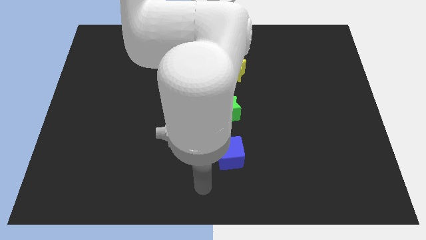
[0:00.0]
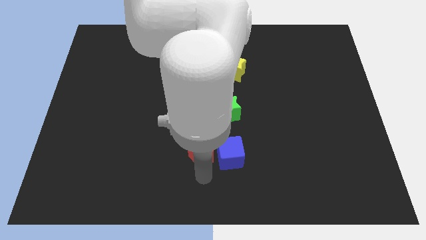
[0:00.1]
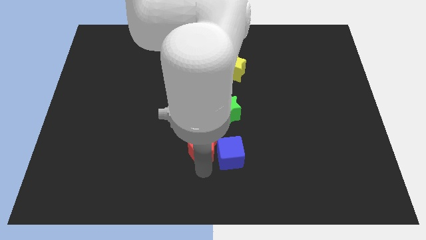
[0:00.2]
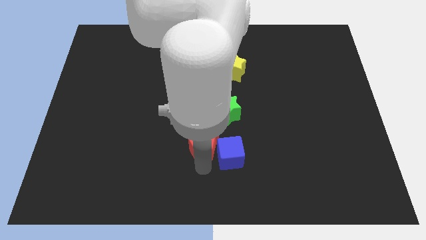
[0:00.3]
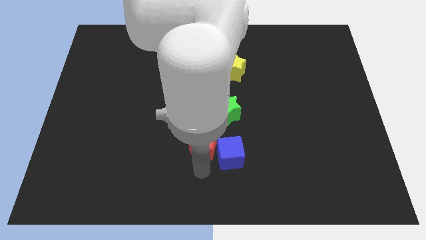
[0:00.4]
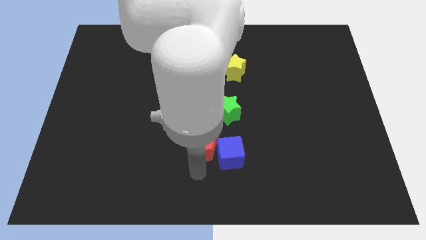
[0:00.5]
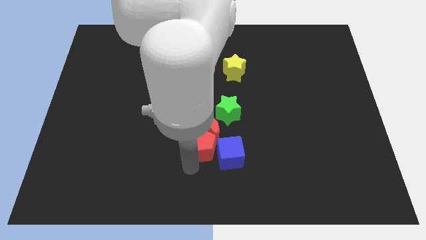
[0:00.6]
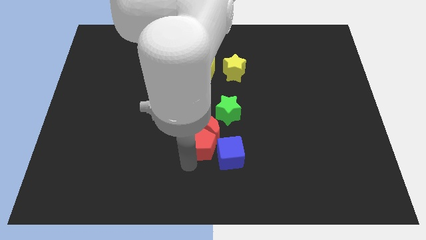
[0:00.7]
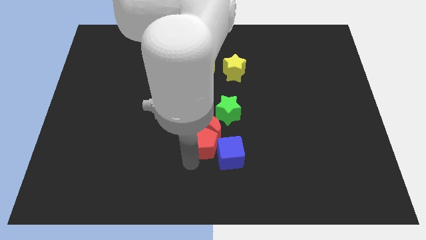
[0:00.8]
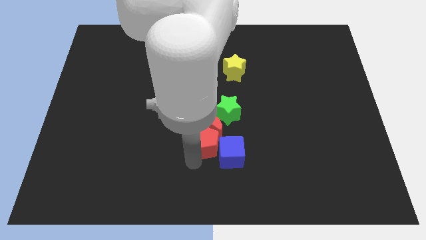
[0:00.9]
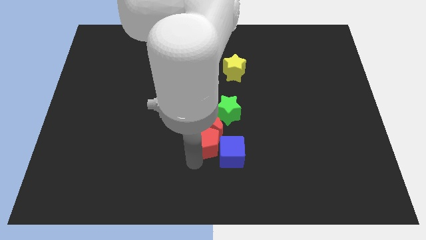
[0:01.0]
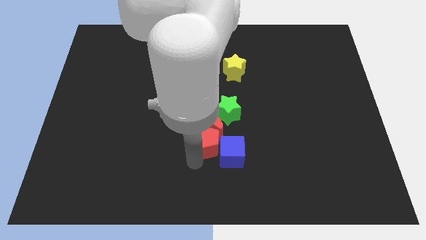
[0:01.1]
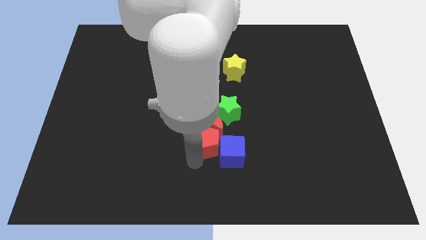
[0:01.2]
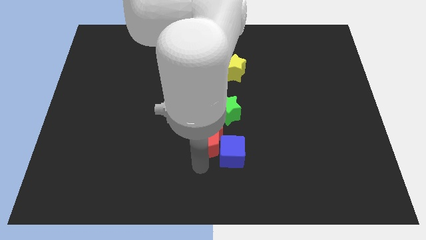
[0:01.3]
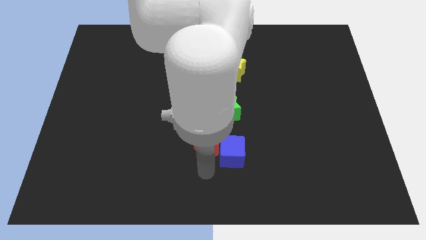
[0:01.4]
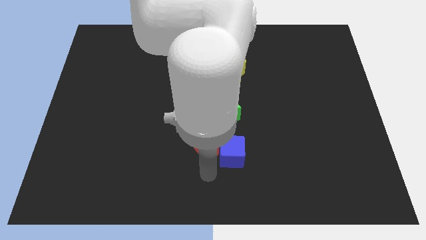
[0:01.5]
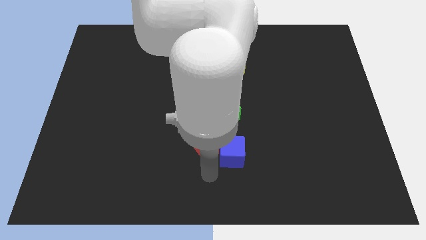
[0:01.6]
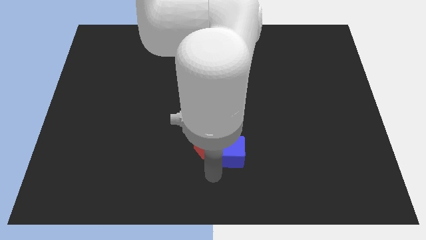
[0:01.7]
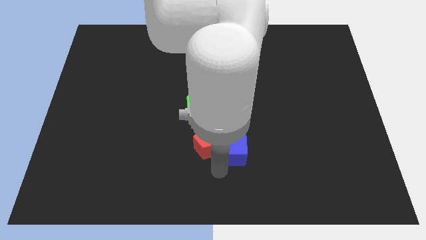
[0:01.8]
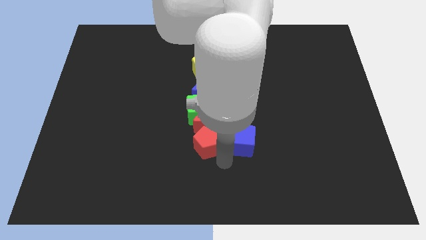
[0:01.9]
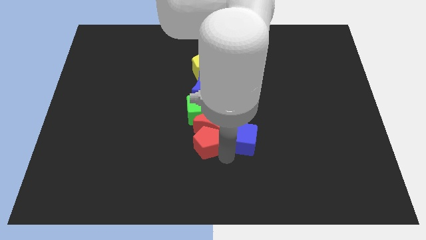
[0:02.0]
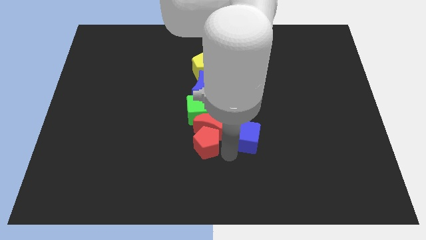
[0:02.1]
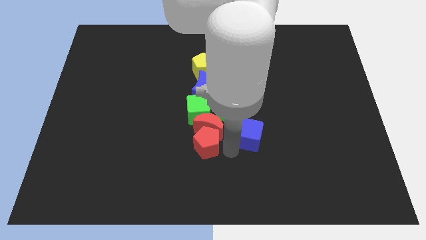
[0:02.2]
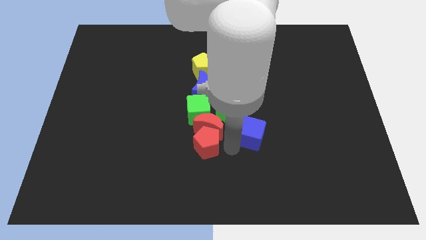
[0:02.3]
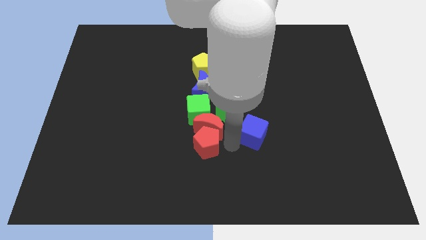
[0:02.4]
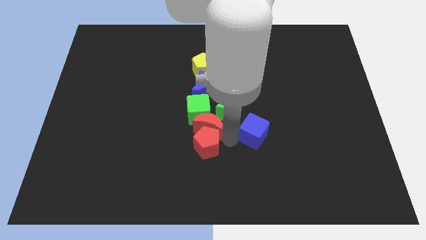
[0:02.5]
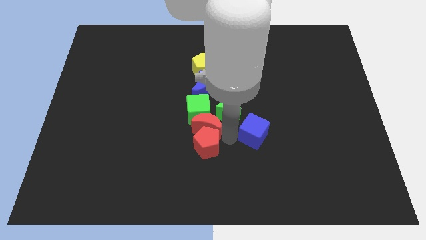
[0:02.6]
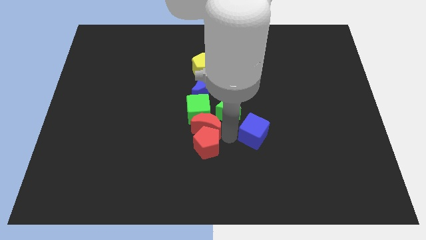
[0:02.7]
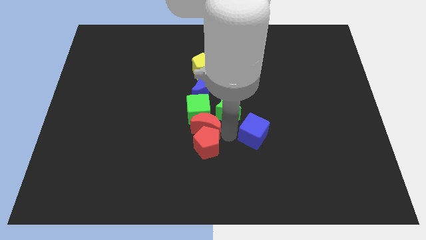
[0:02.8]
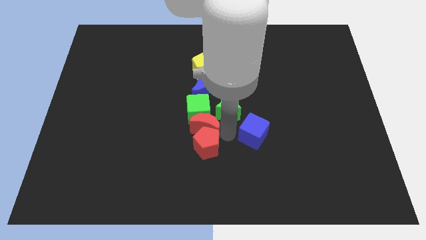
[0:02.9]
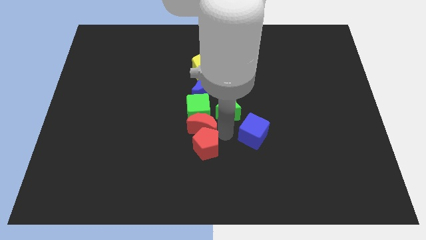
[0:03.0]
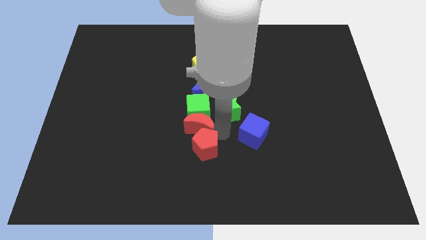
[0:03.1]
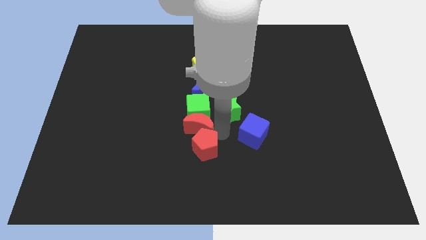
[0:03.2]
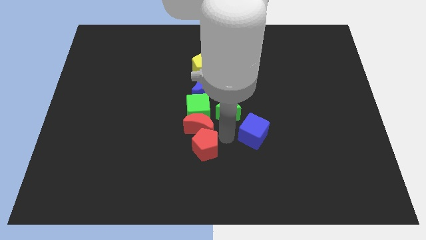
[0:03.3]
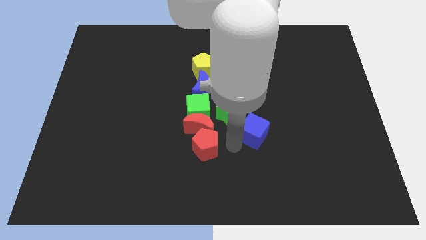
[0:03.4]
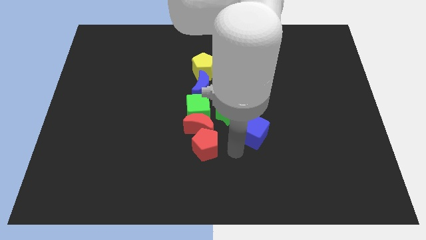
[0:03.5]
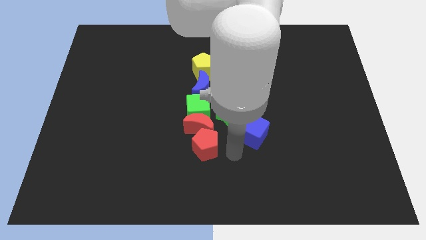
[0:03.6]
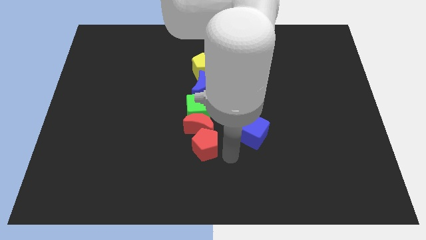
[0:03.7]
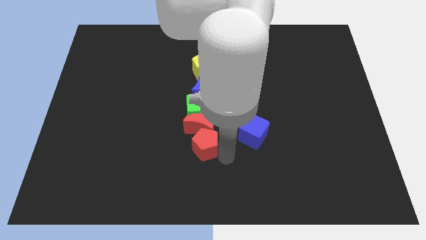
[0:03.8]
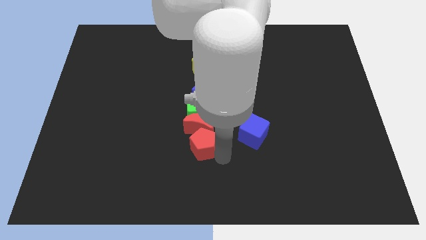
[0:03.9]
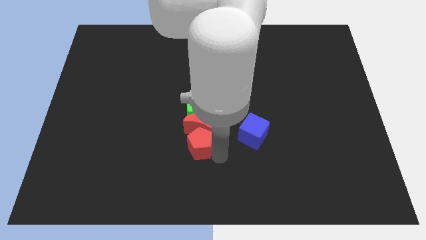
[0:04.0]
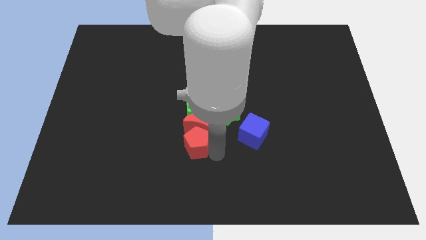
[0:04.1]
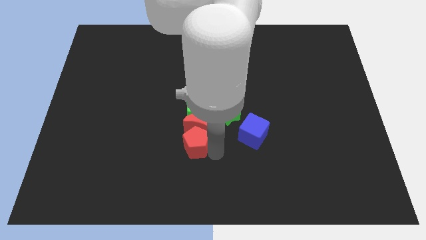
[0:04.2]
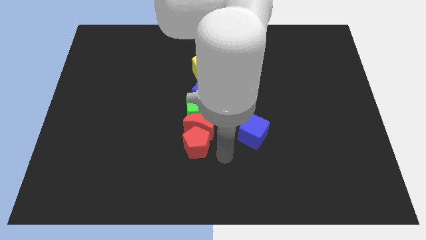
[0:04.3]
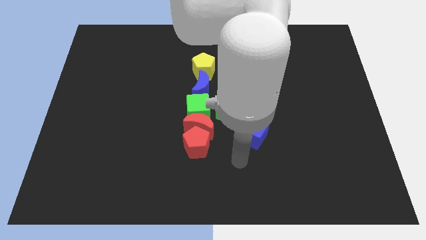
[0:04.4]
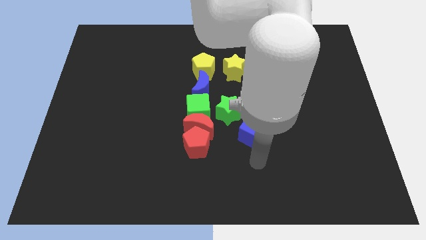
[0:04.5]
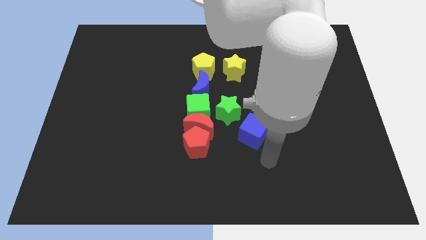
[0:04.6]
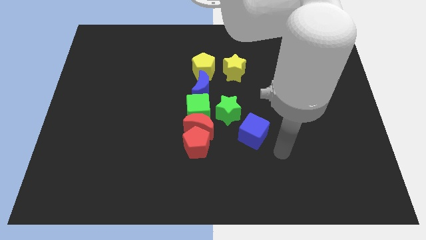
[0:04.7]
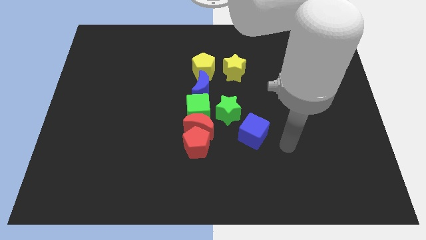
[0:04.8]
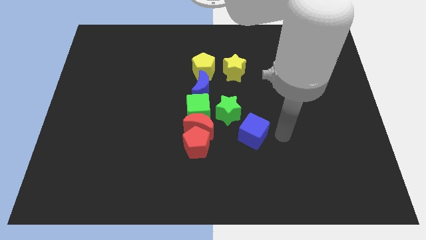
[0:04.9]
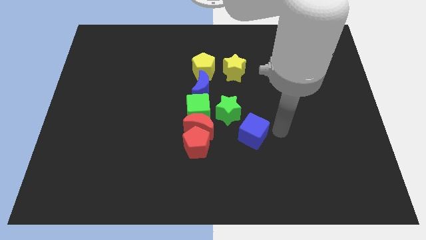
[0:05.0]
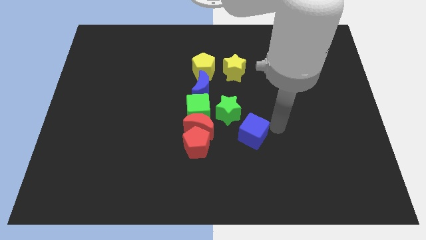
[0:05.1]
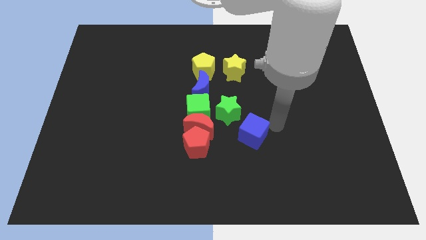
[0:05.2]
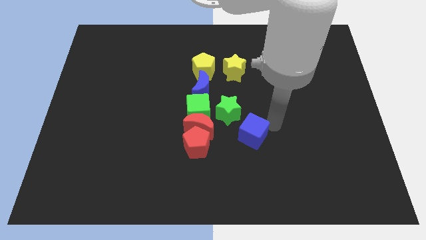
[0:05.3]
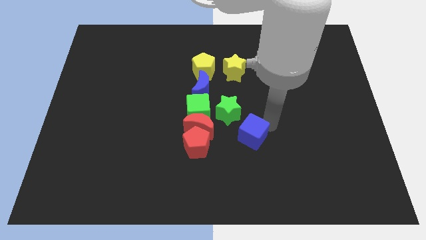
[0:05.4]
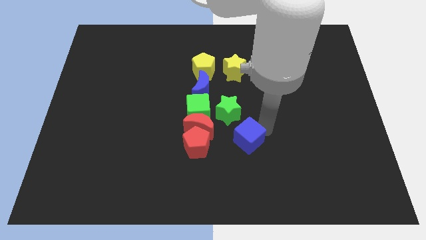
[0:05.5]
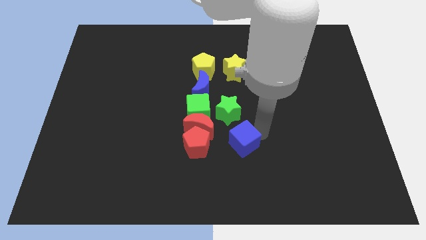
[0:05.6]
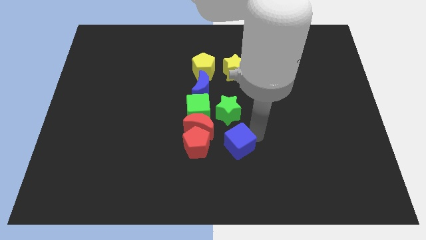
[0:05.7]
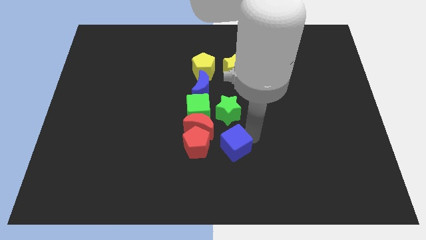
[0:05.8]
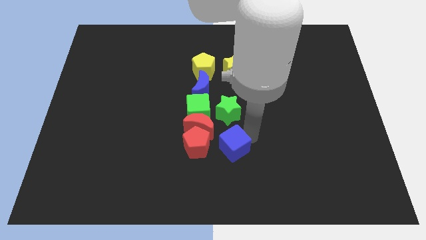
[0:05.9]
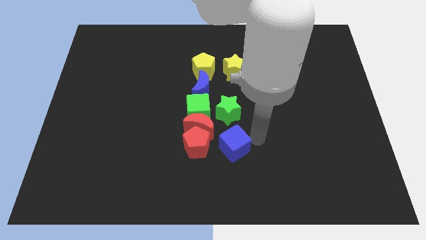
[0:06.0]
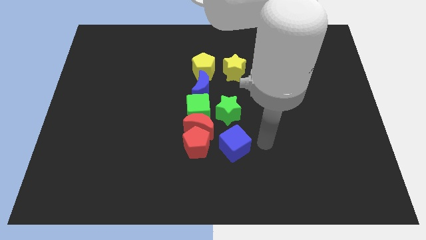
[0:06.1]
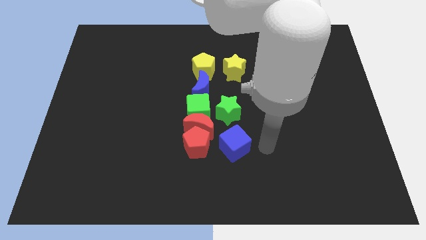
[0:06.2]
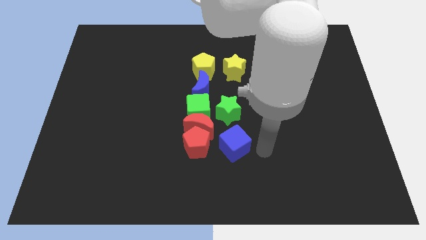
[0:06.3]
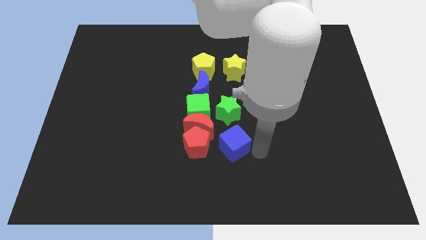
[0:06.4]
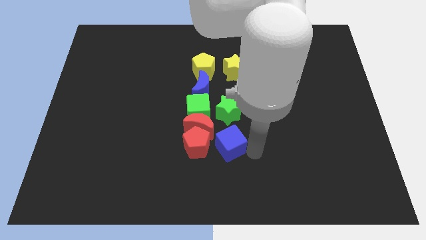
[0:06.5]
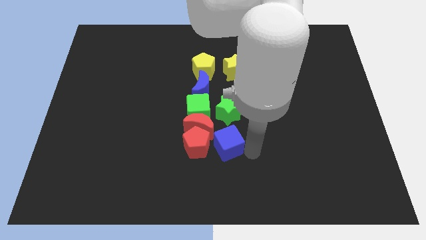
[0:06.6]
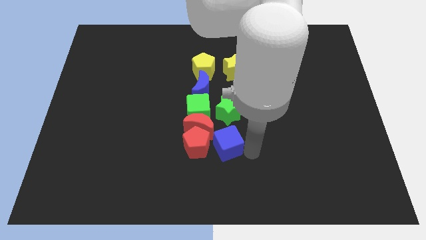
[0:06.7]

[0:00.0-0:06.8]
place the red pentagon and red crescent to the bottom of the green cube

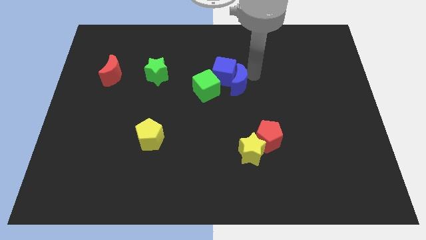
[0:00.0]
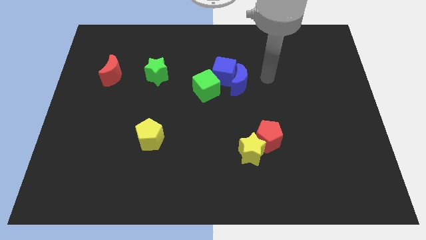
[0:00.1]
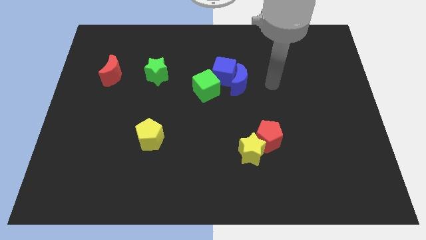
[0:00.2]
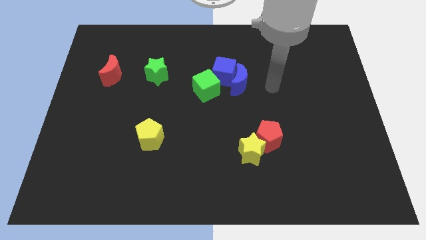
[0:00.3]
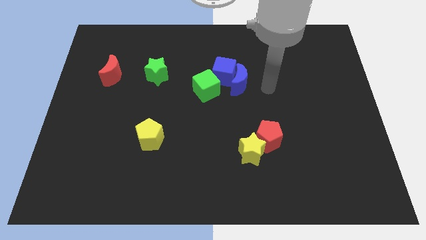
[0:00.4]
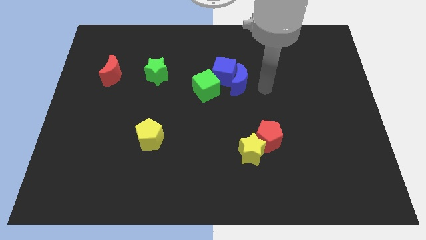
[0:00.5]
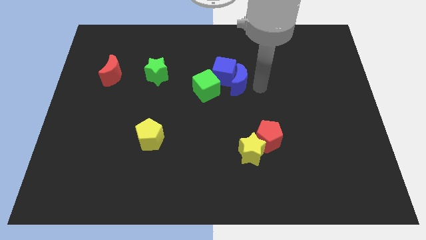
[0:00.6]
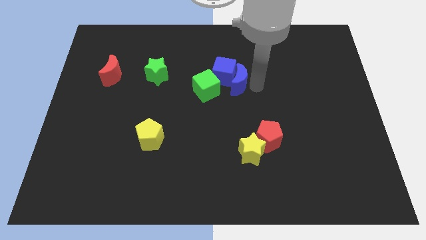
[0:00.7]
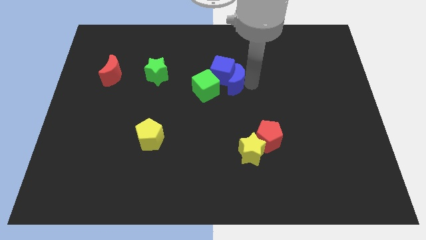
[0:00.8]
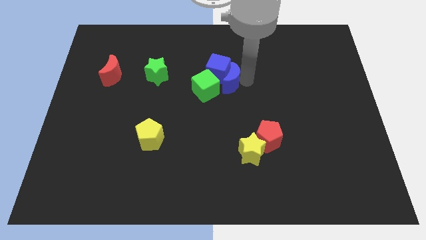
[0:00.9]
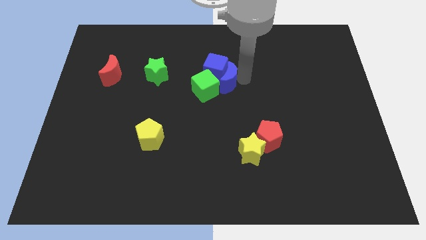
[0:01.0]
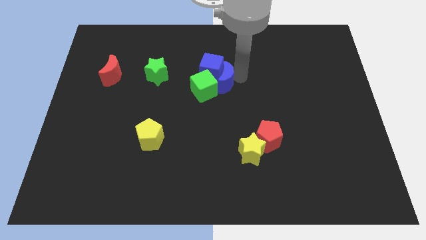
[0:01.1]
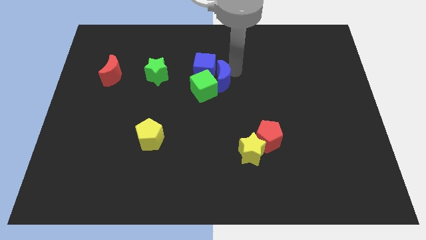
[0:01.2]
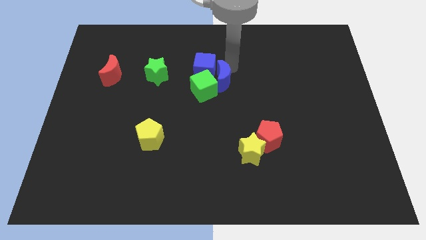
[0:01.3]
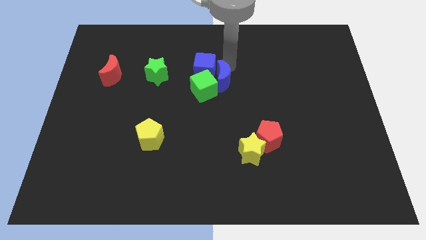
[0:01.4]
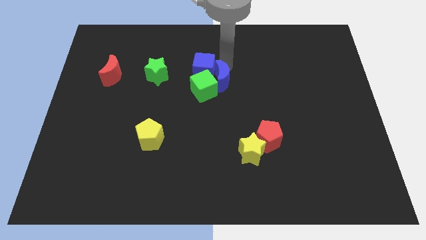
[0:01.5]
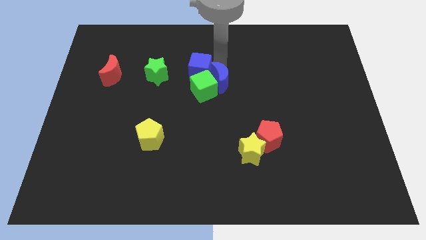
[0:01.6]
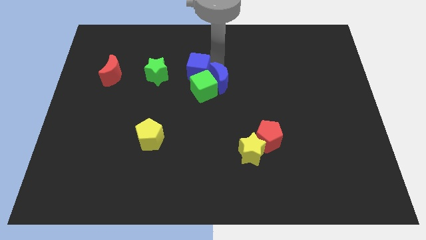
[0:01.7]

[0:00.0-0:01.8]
push blocks towards left side

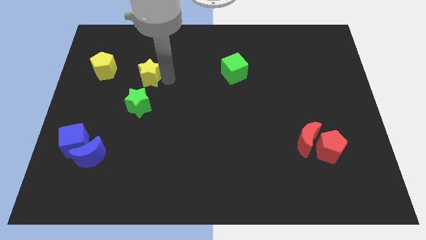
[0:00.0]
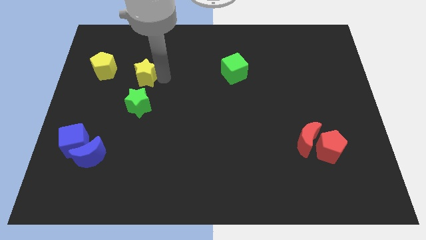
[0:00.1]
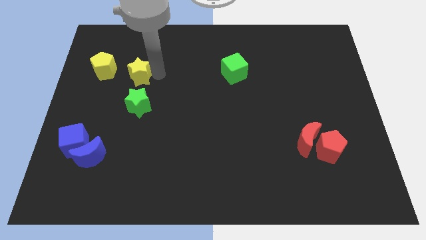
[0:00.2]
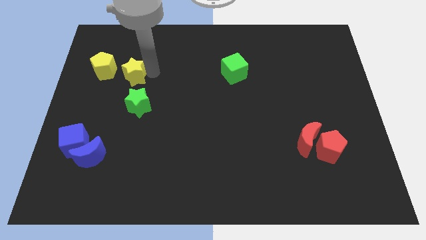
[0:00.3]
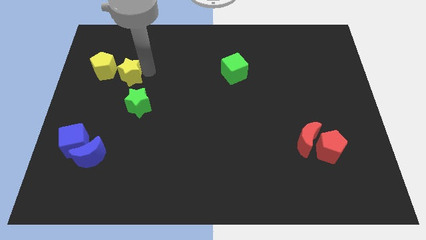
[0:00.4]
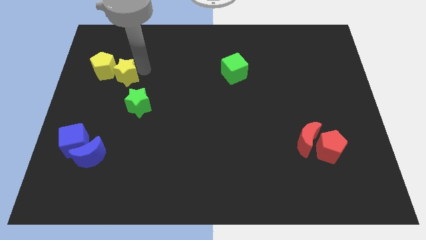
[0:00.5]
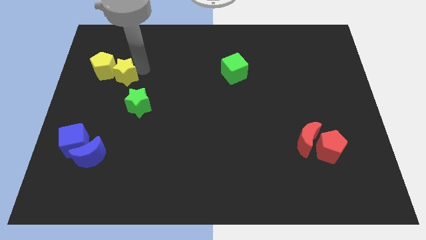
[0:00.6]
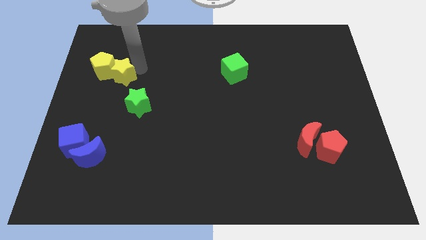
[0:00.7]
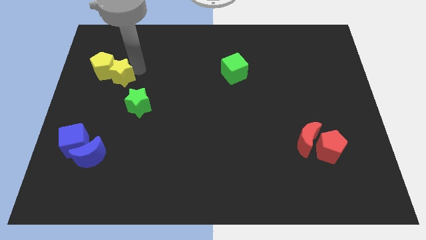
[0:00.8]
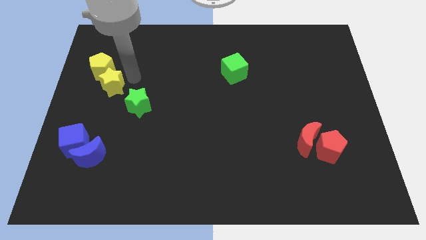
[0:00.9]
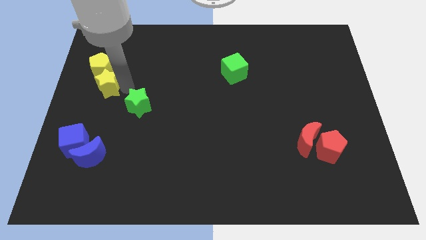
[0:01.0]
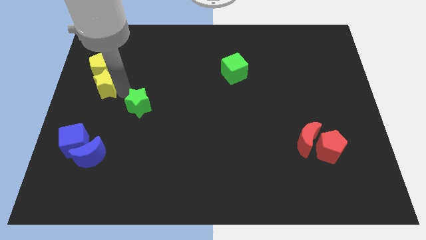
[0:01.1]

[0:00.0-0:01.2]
move the yellow star into the yellow pentagon
